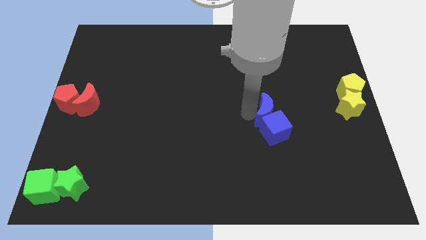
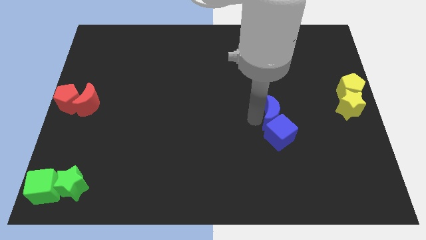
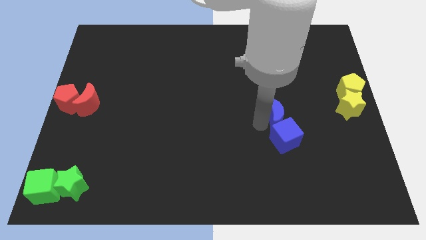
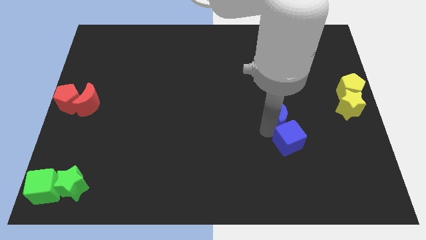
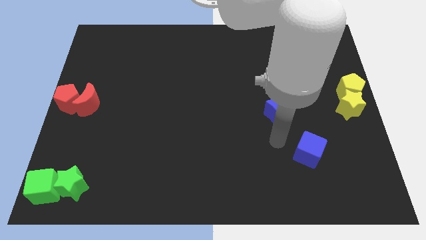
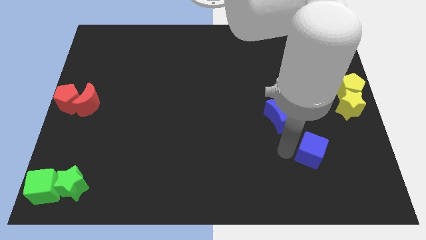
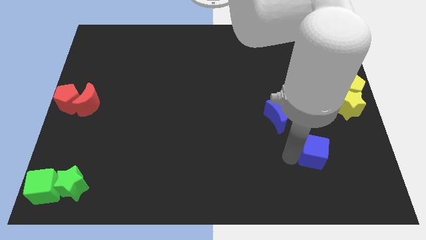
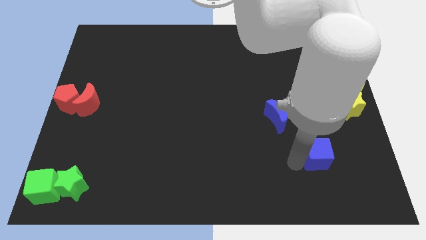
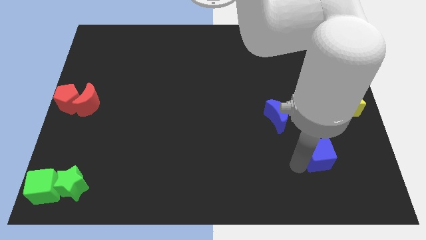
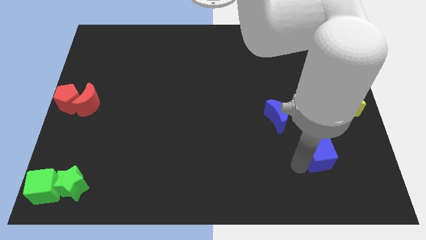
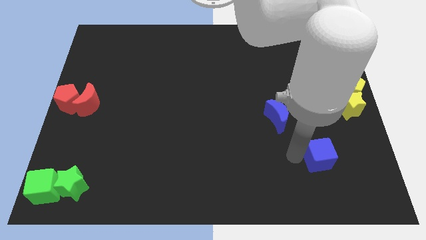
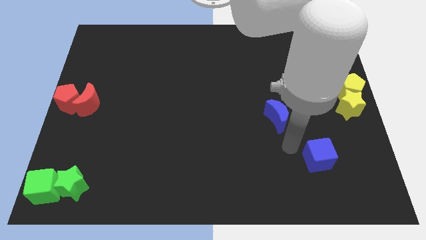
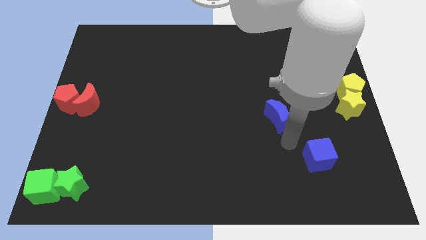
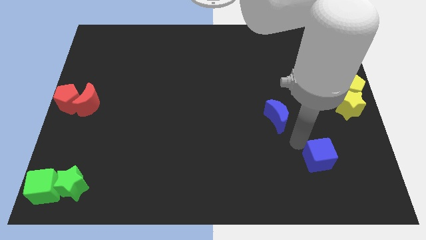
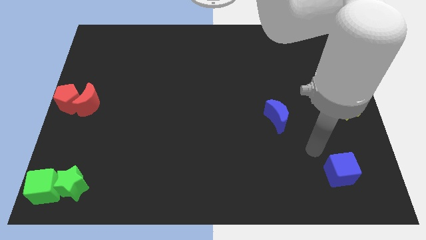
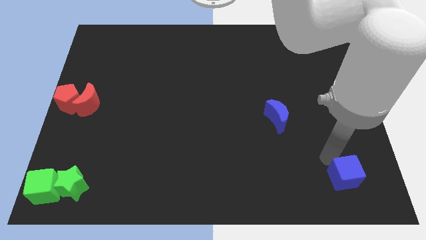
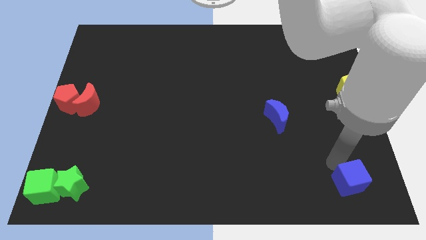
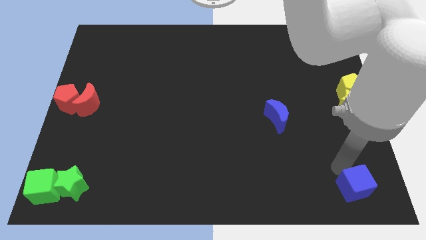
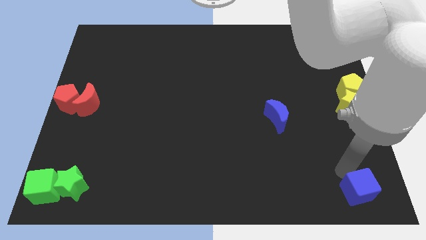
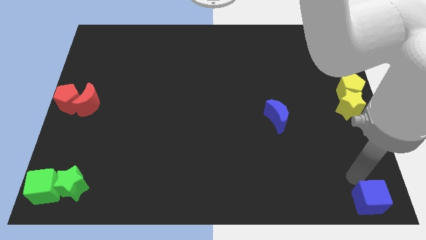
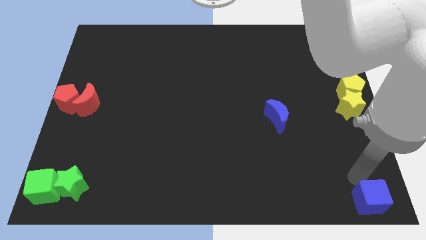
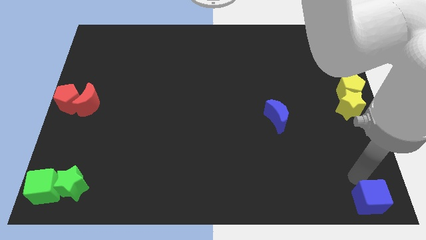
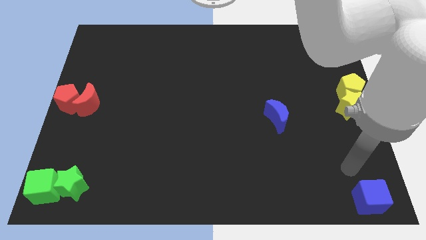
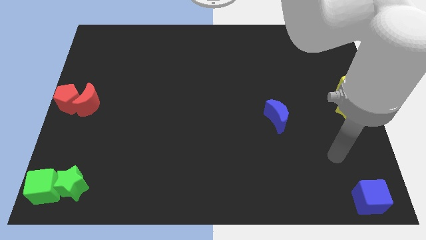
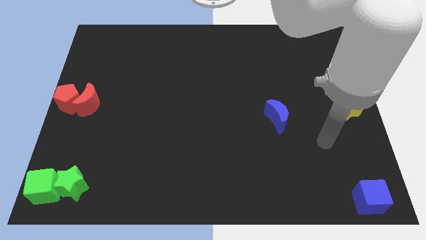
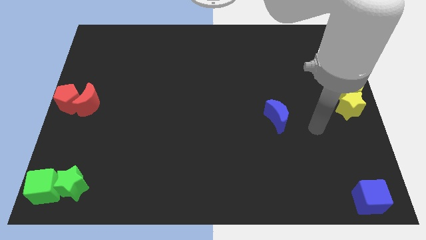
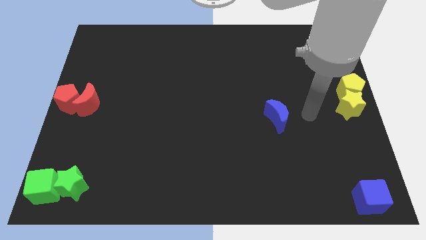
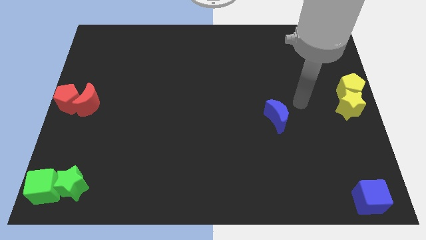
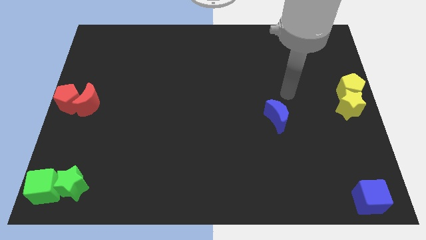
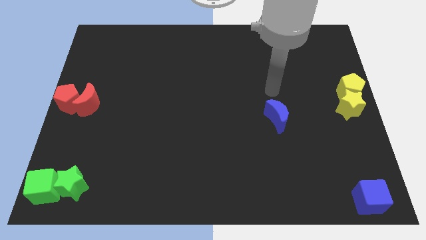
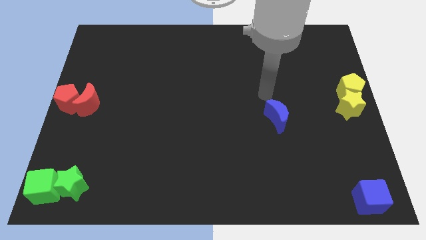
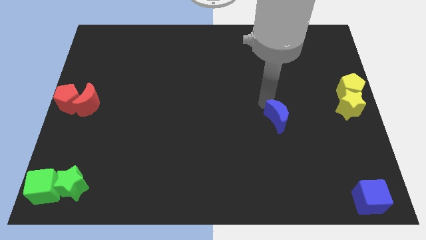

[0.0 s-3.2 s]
place the blue cube to the bottom right of the board

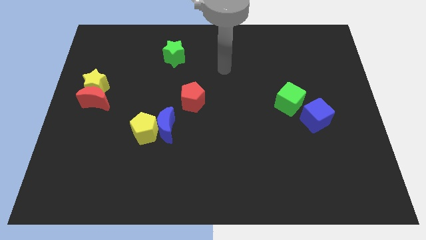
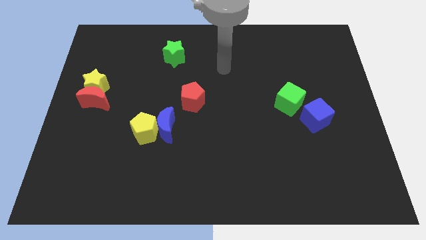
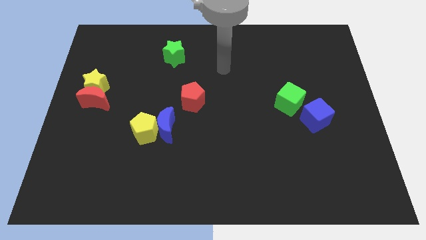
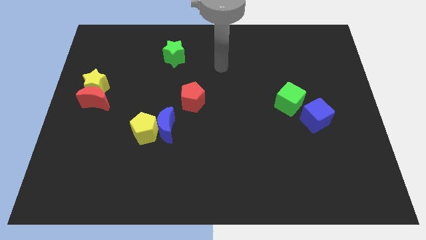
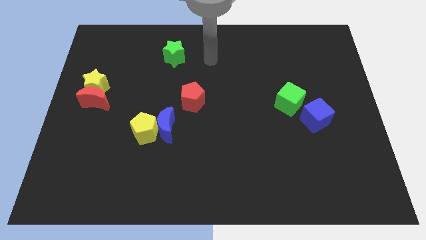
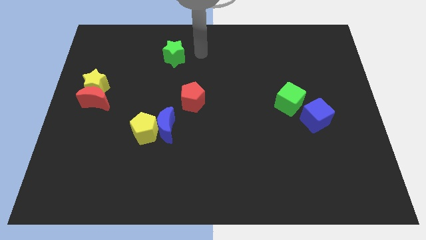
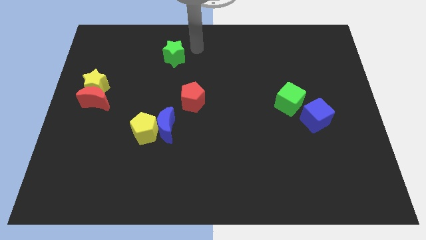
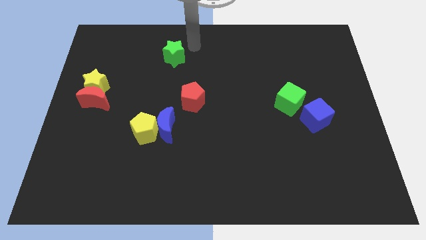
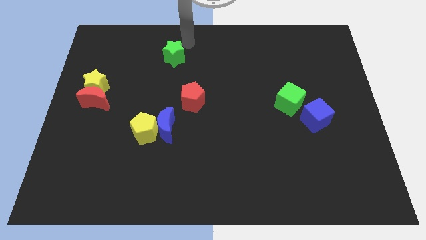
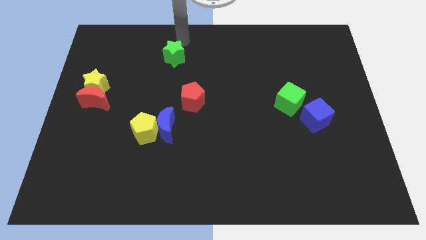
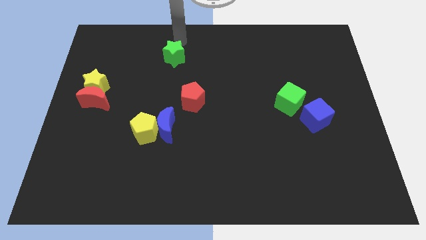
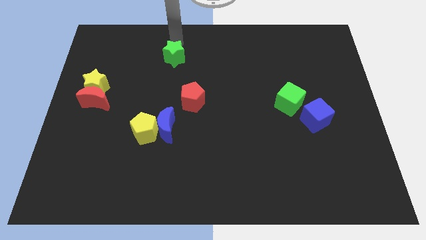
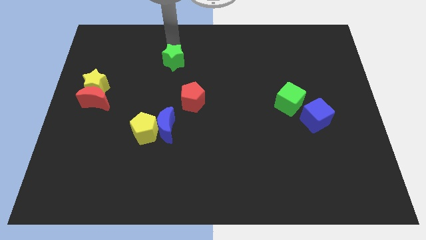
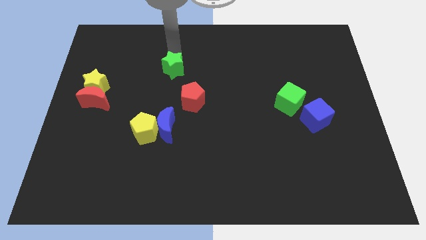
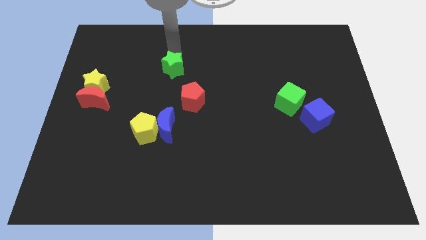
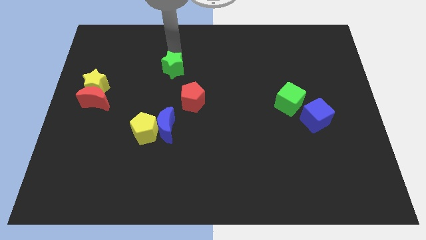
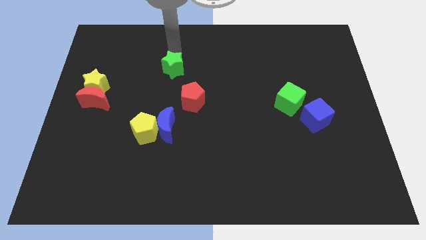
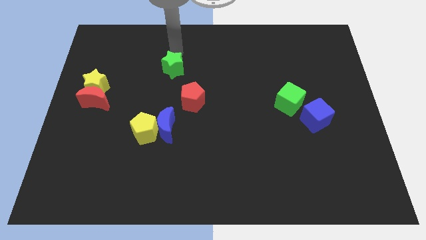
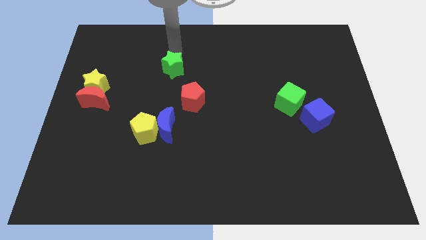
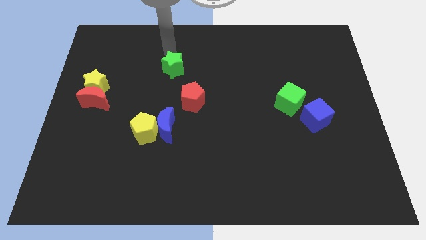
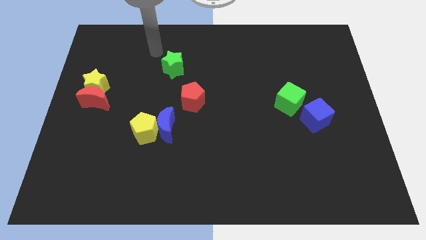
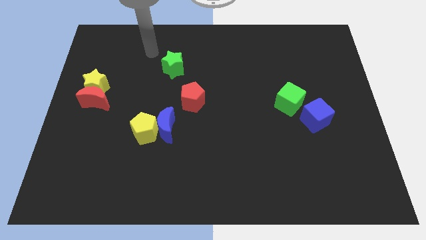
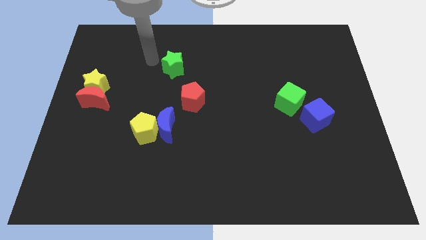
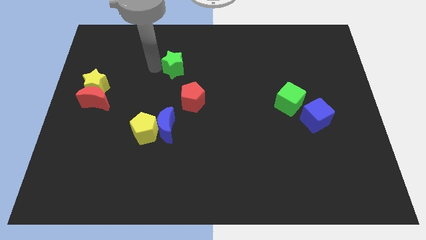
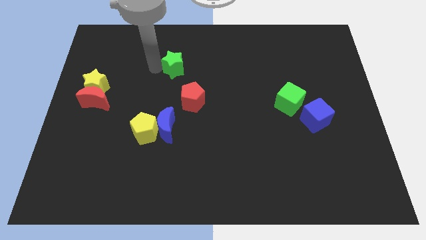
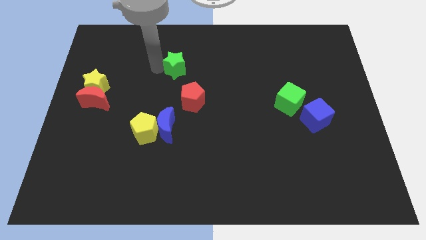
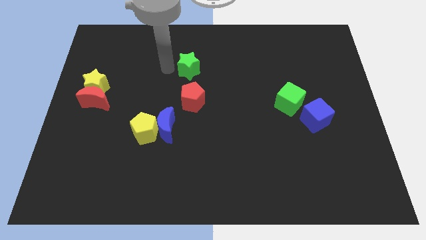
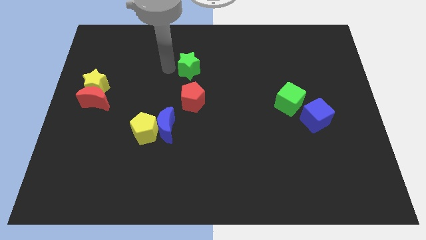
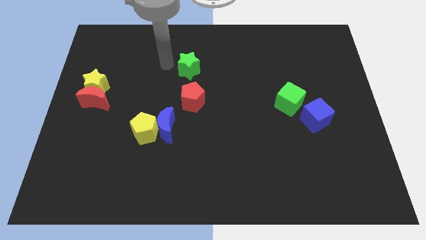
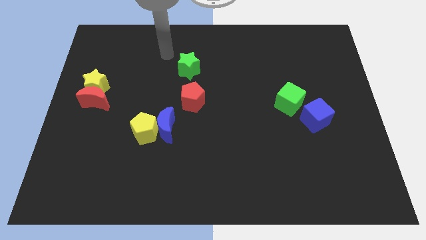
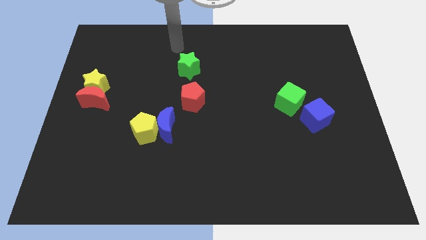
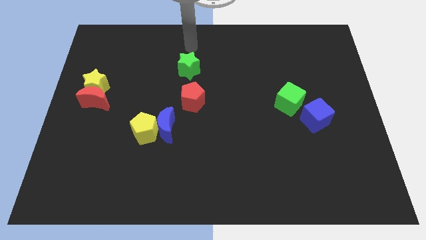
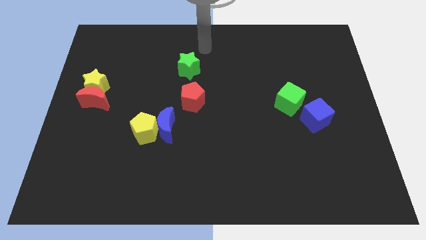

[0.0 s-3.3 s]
put the green star above the red pentagon

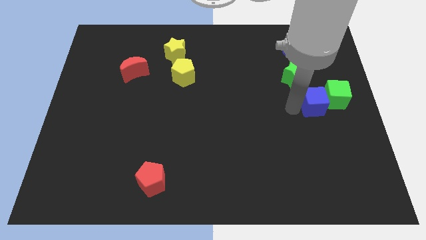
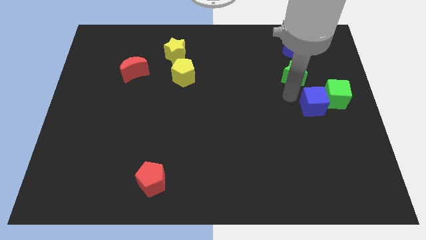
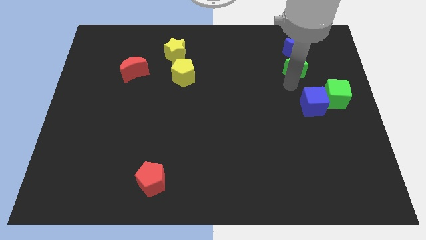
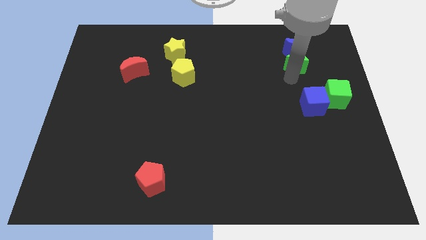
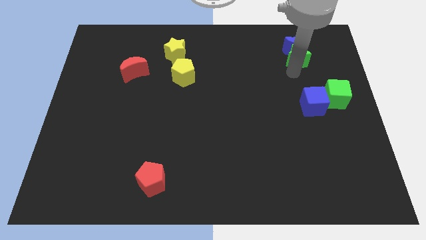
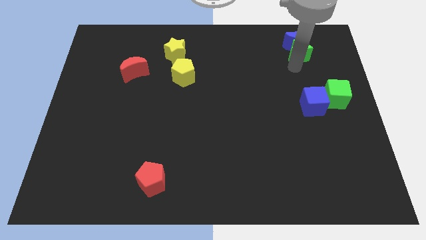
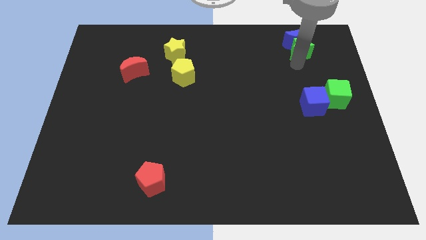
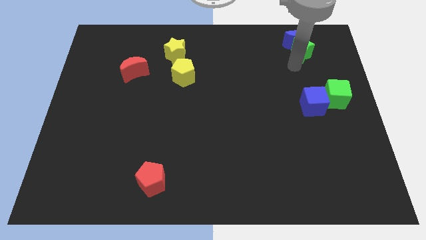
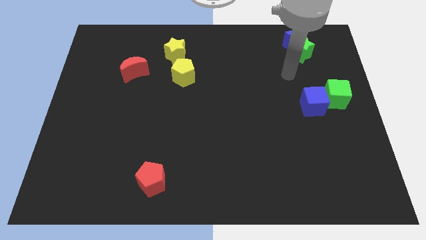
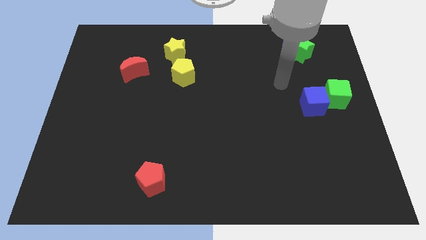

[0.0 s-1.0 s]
push the green star upwards slightly

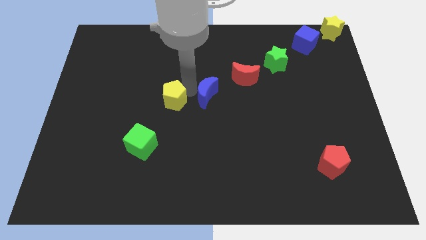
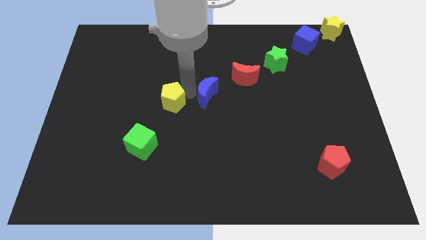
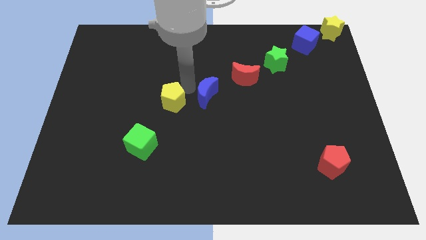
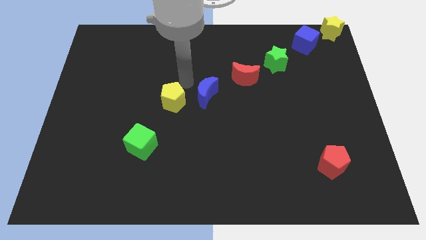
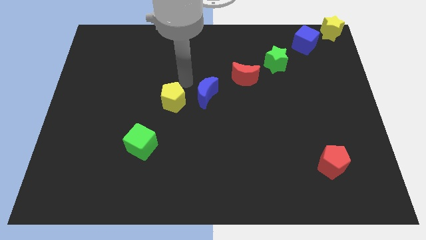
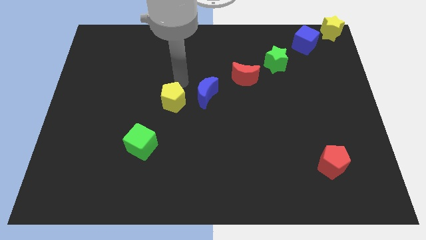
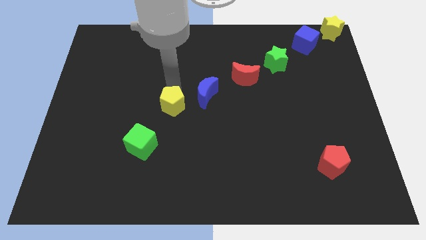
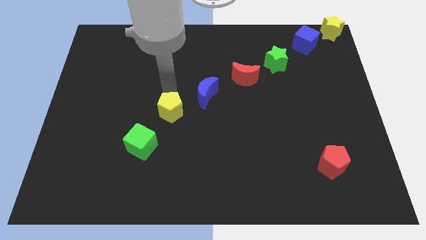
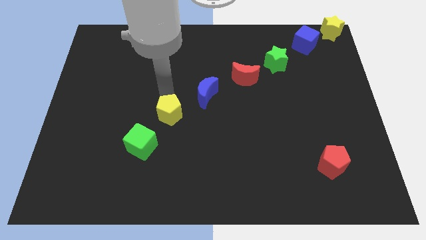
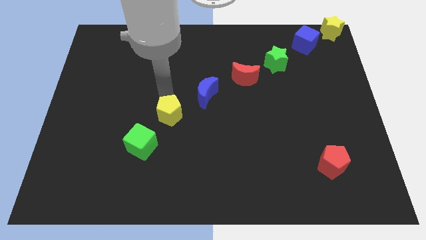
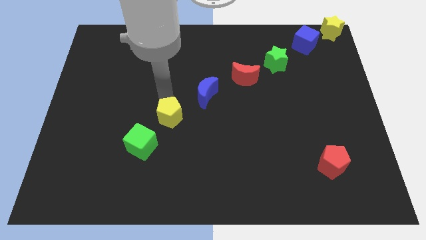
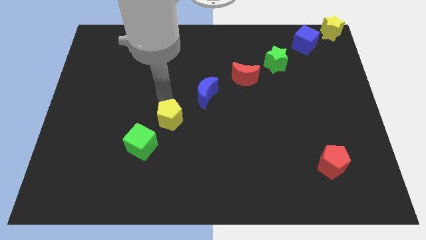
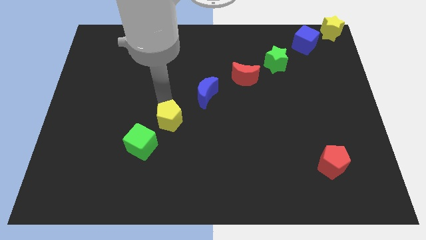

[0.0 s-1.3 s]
slide the yellow pentagon towards the green cube

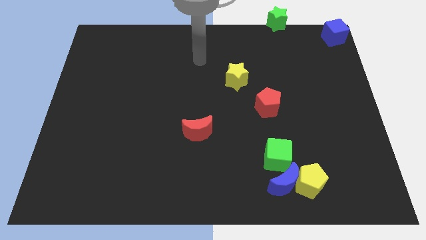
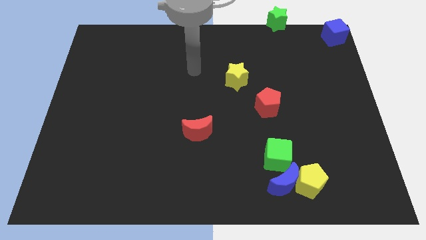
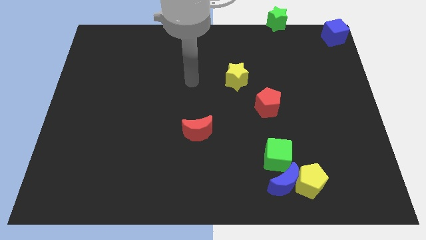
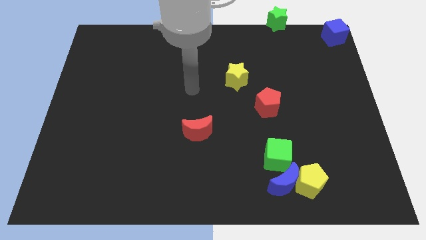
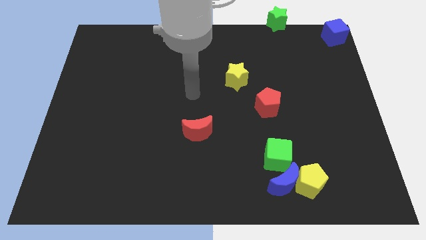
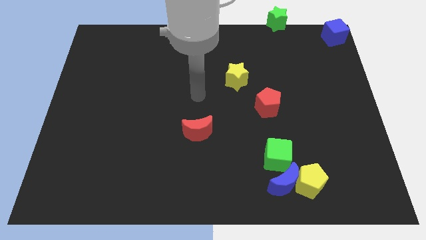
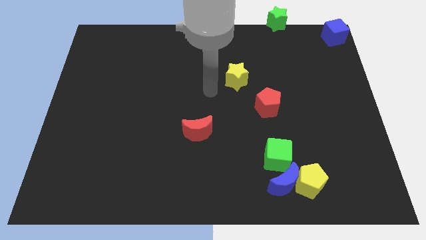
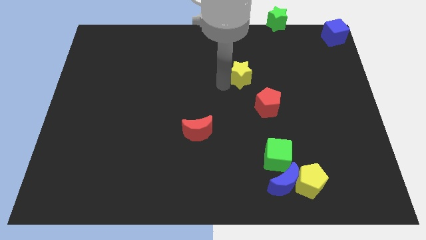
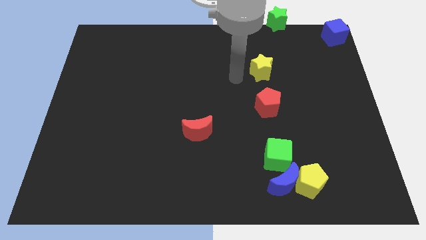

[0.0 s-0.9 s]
push the yellow star to top right side of the board
